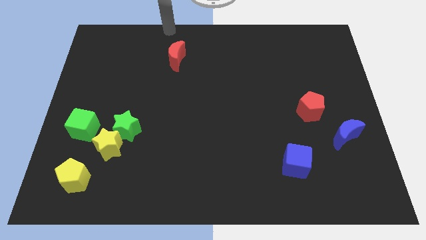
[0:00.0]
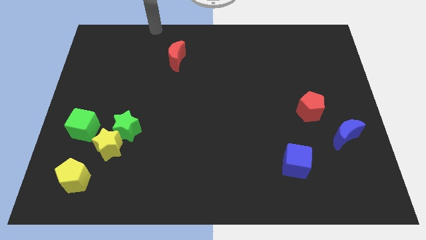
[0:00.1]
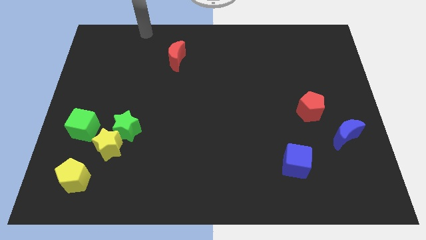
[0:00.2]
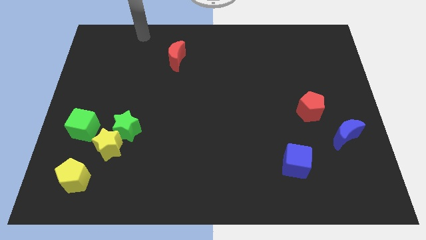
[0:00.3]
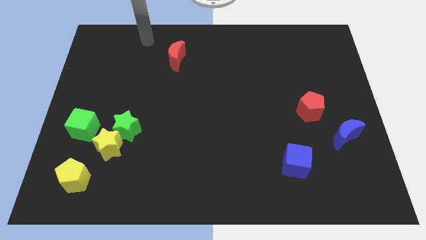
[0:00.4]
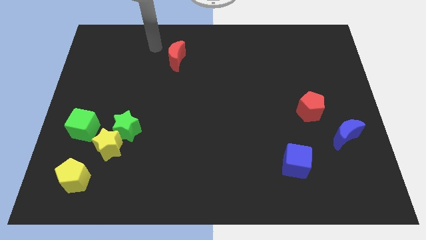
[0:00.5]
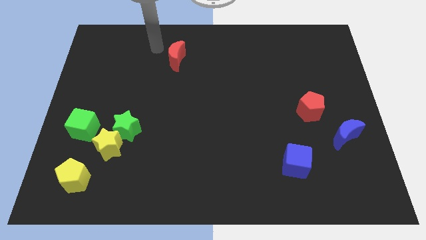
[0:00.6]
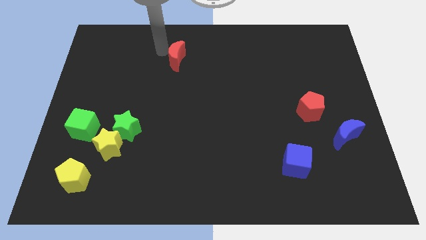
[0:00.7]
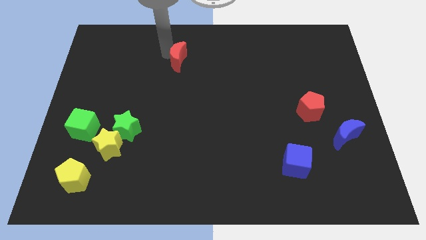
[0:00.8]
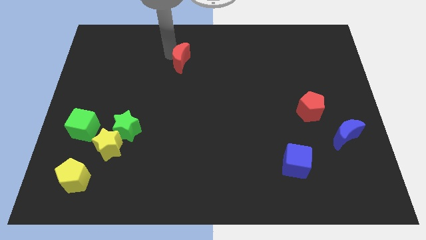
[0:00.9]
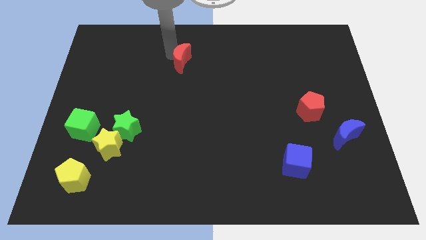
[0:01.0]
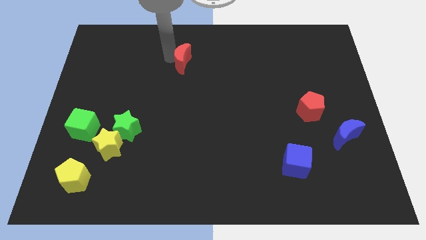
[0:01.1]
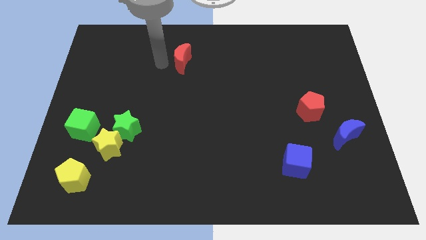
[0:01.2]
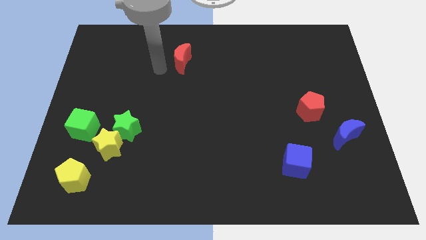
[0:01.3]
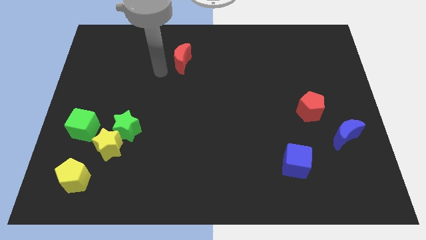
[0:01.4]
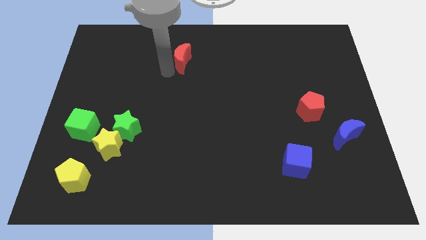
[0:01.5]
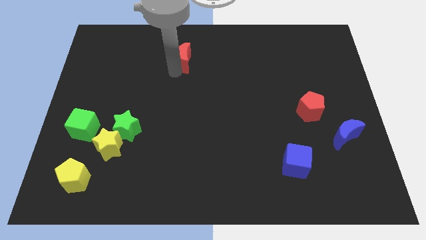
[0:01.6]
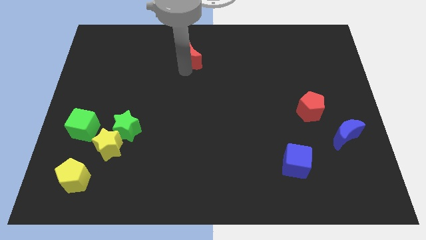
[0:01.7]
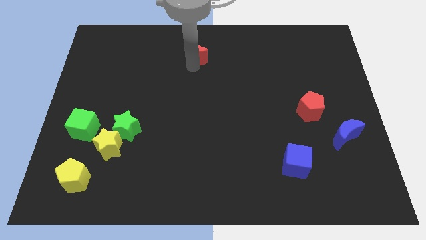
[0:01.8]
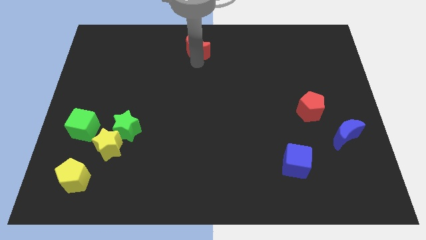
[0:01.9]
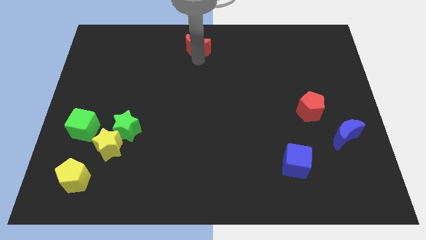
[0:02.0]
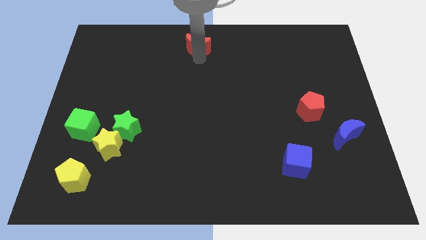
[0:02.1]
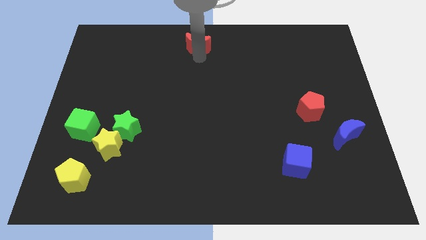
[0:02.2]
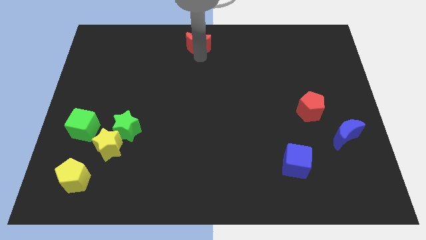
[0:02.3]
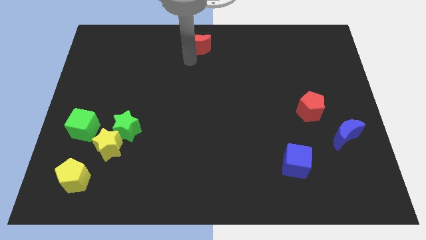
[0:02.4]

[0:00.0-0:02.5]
push the red crescent at center top

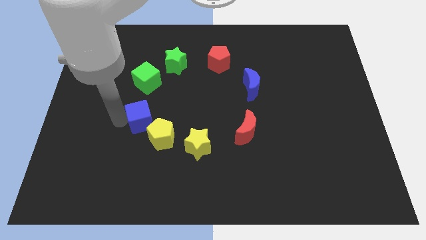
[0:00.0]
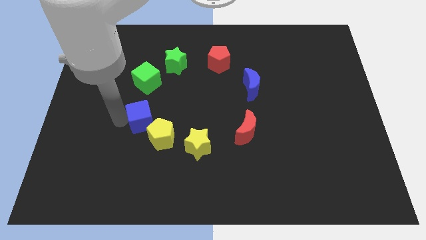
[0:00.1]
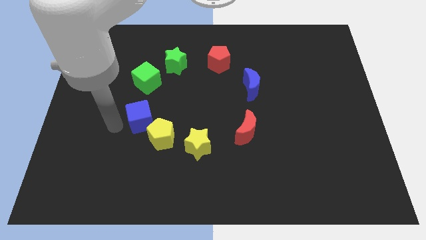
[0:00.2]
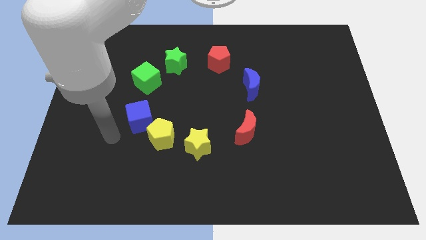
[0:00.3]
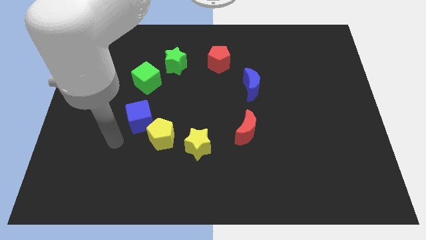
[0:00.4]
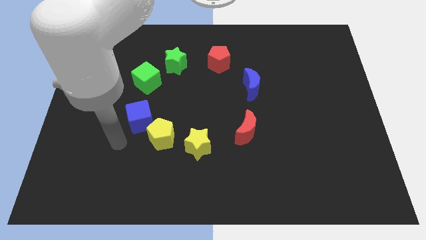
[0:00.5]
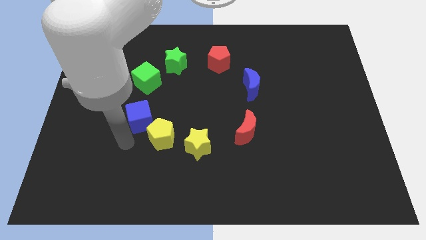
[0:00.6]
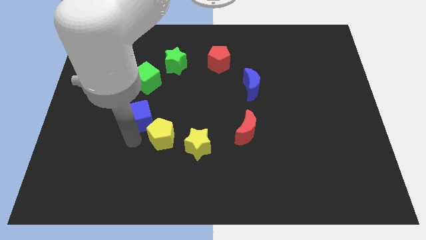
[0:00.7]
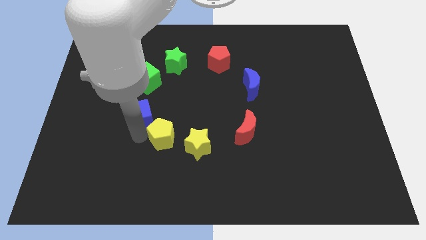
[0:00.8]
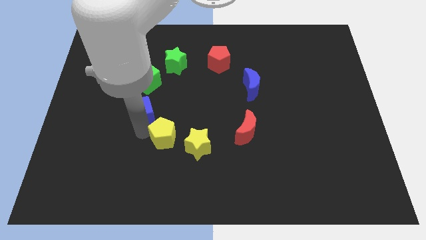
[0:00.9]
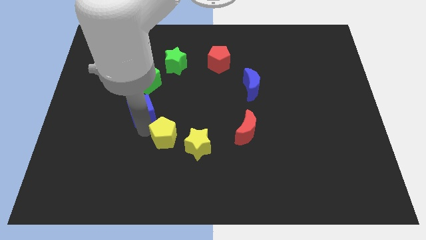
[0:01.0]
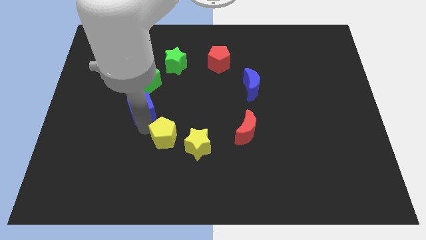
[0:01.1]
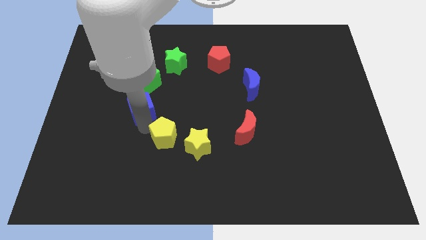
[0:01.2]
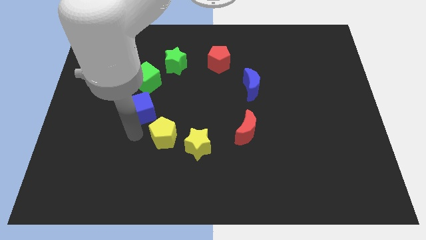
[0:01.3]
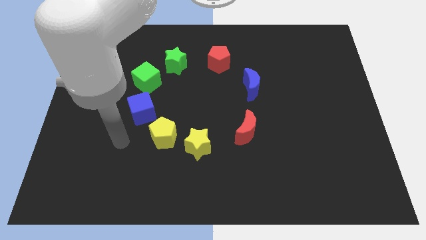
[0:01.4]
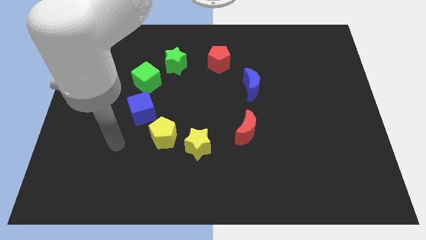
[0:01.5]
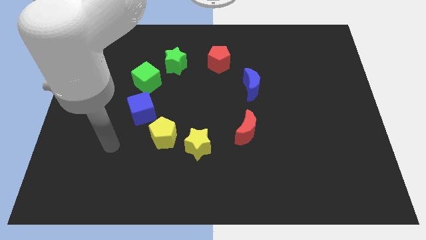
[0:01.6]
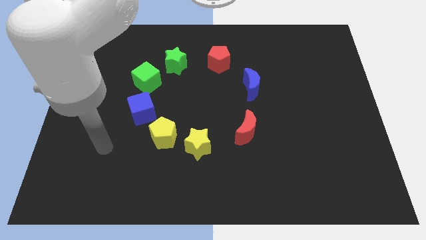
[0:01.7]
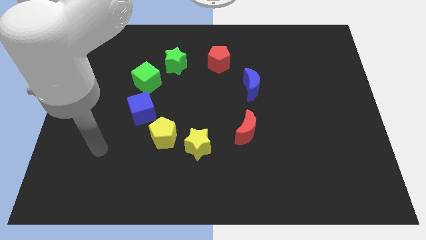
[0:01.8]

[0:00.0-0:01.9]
push blue cube towards forward

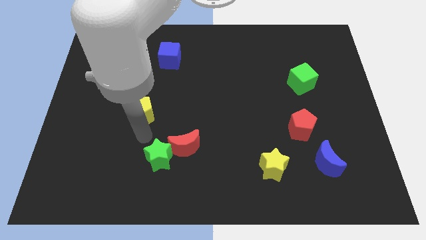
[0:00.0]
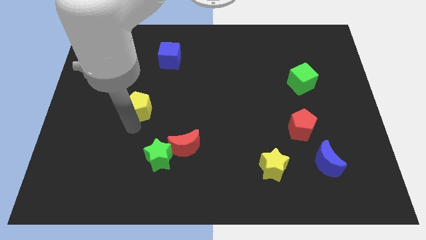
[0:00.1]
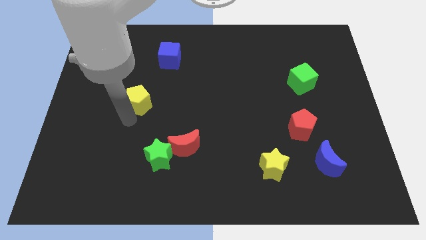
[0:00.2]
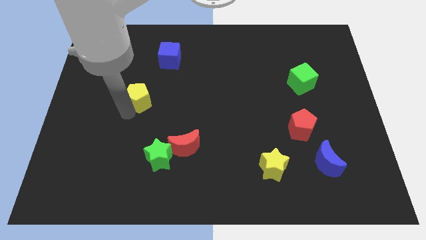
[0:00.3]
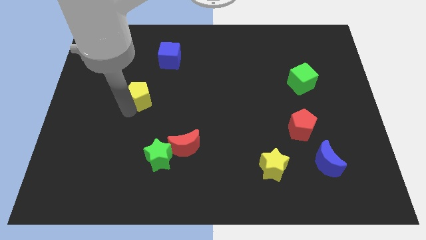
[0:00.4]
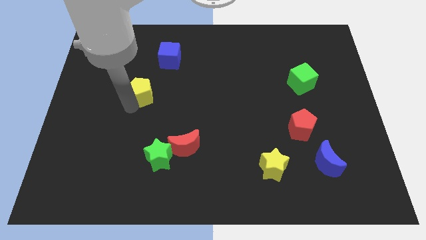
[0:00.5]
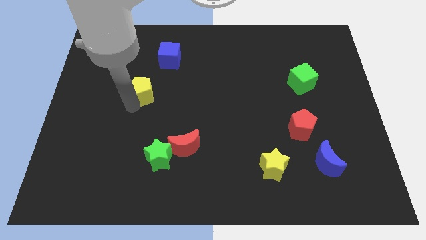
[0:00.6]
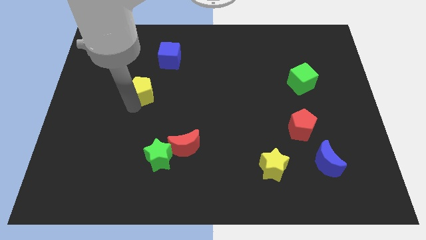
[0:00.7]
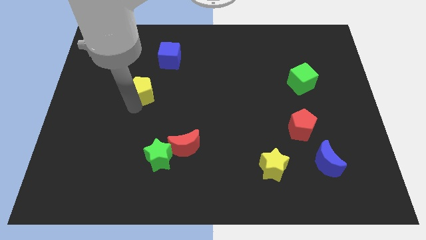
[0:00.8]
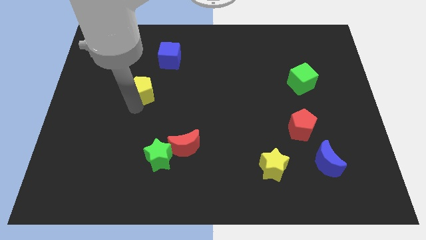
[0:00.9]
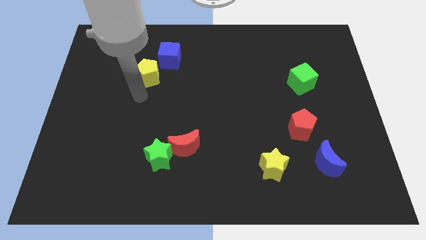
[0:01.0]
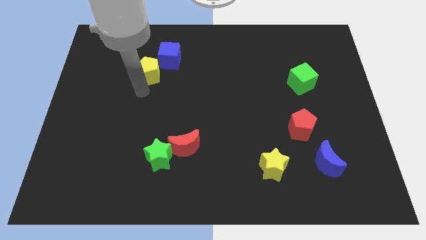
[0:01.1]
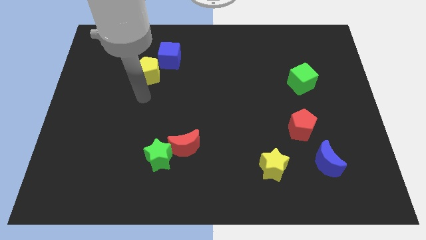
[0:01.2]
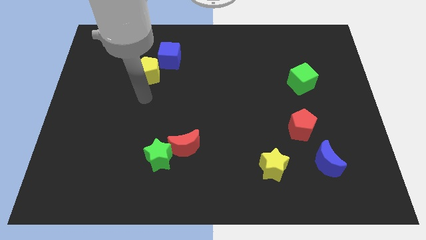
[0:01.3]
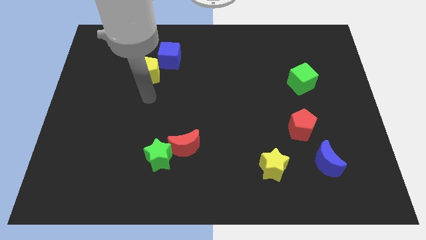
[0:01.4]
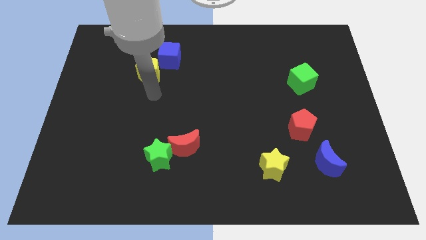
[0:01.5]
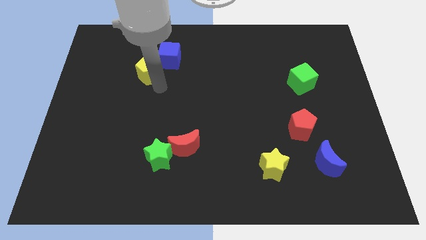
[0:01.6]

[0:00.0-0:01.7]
drag the yellow pentagon close to the blue cube

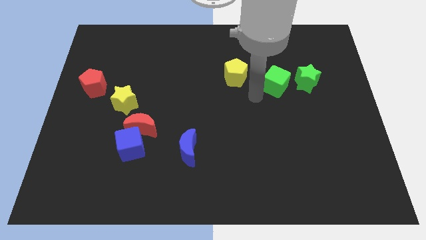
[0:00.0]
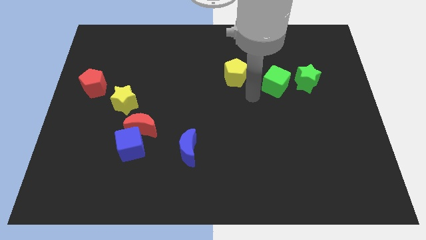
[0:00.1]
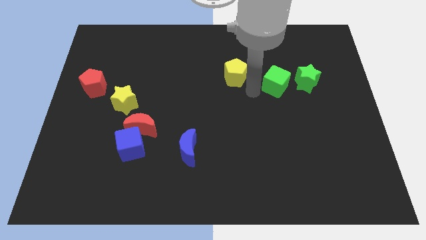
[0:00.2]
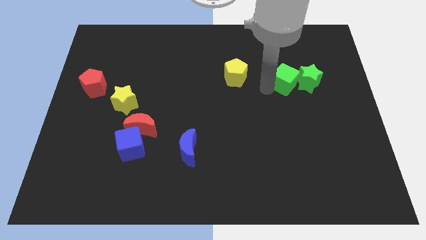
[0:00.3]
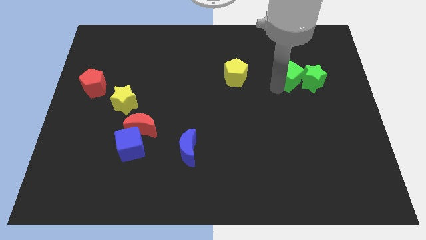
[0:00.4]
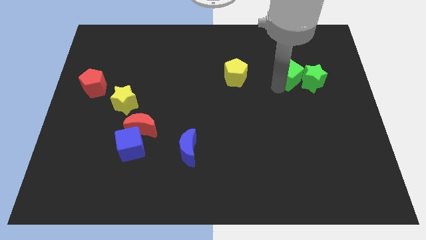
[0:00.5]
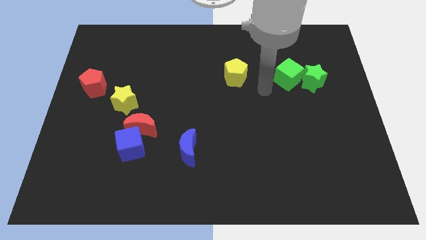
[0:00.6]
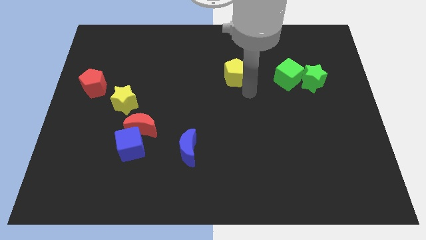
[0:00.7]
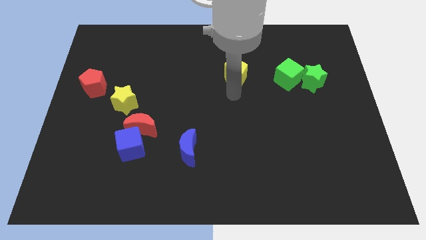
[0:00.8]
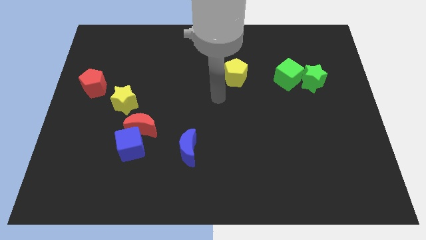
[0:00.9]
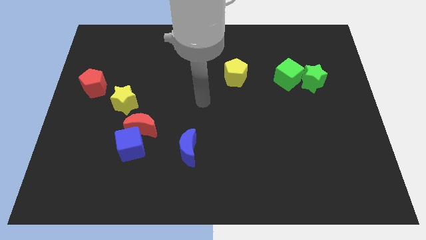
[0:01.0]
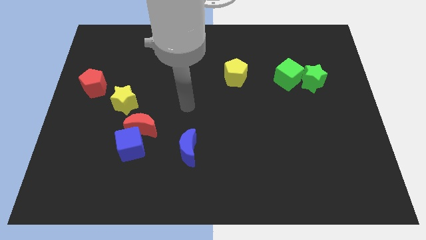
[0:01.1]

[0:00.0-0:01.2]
move the green cube into the left of the green star

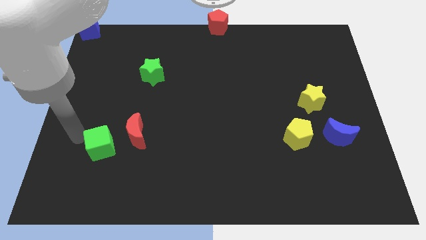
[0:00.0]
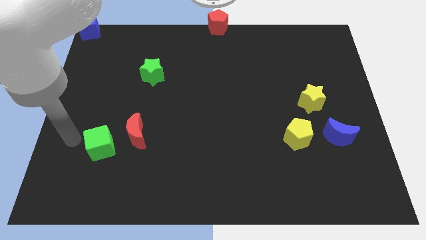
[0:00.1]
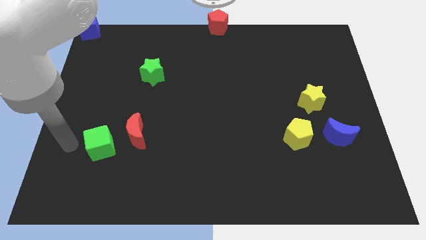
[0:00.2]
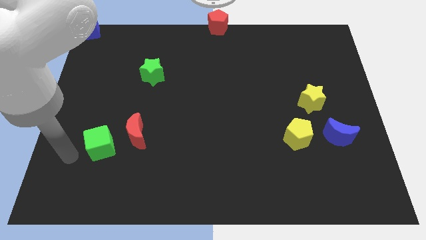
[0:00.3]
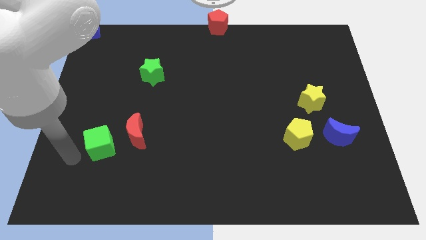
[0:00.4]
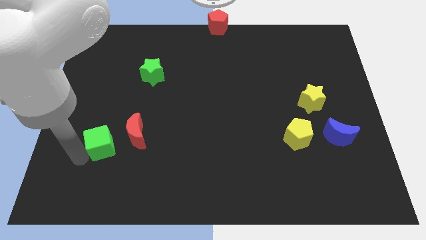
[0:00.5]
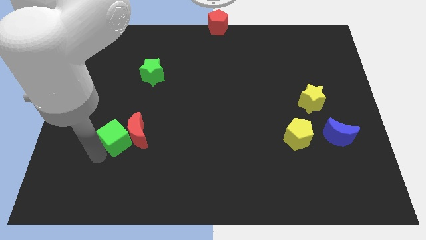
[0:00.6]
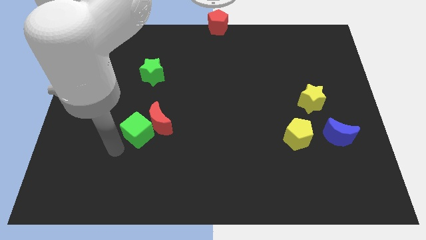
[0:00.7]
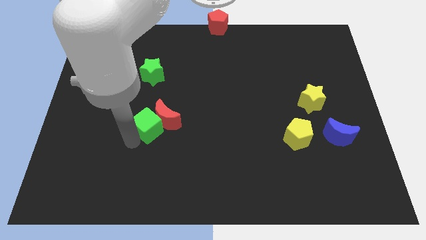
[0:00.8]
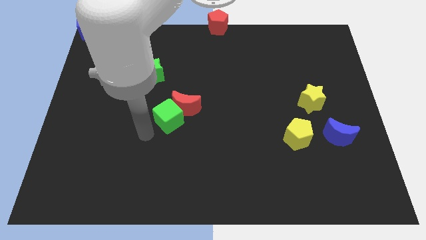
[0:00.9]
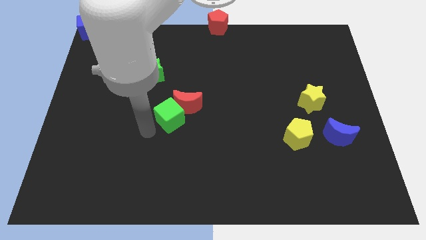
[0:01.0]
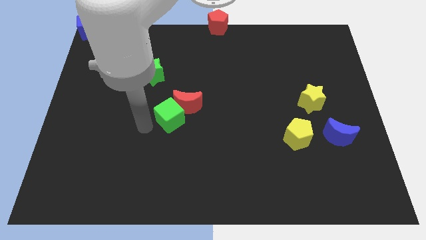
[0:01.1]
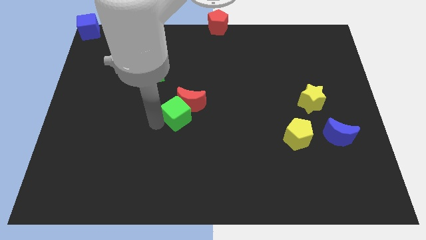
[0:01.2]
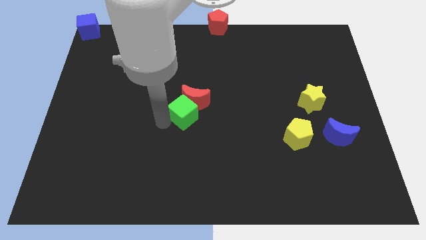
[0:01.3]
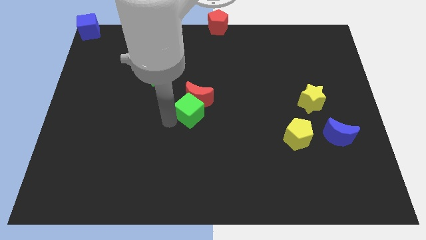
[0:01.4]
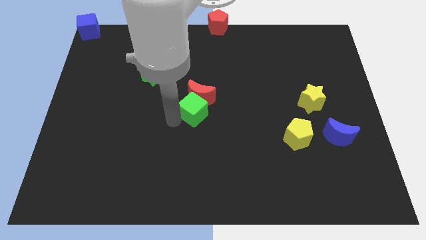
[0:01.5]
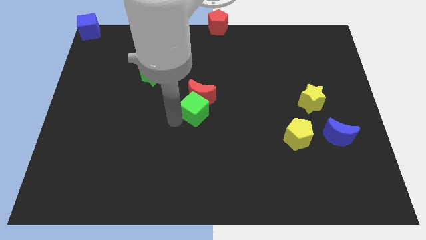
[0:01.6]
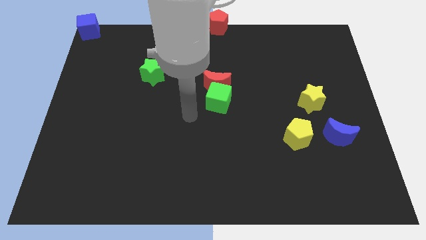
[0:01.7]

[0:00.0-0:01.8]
place the green cube and red moon together between the green star and yellow pentagon
